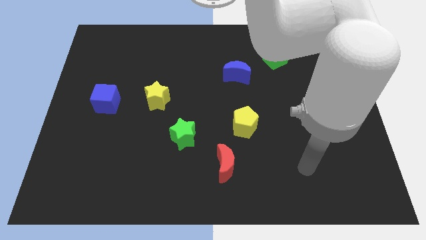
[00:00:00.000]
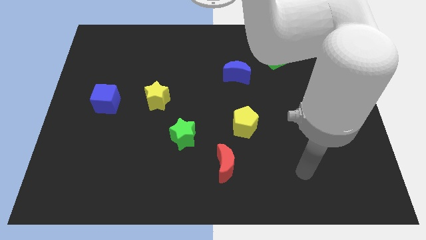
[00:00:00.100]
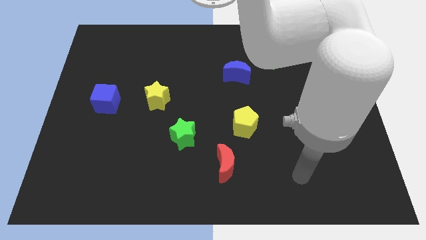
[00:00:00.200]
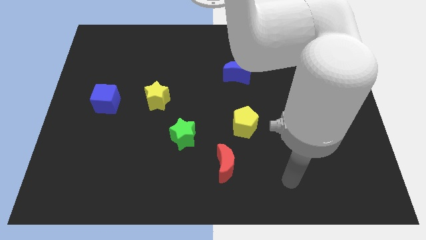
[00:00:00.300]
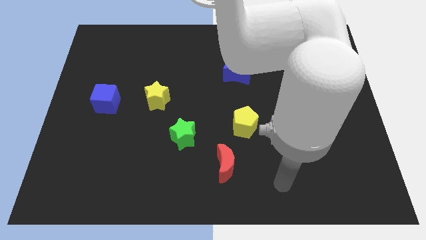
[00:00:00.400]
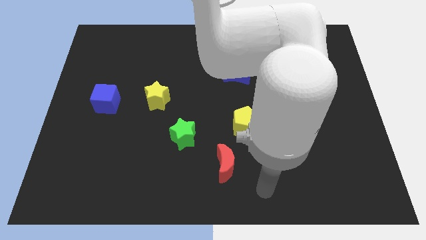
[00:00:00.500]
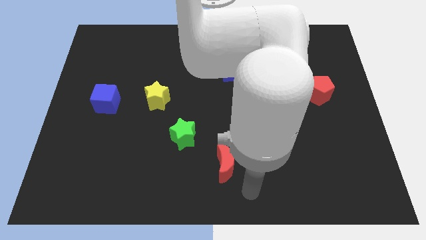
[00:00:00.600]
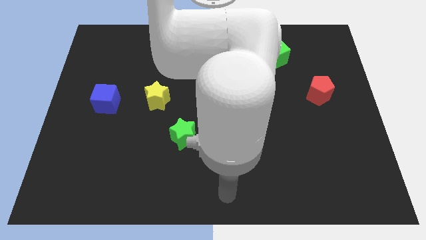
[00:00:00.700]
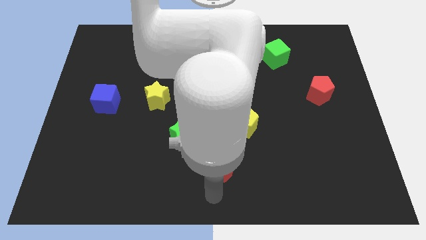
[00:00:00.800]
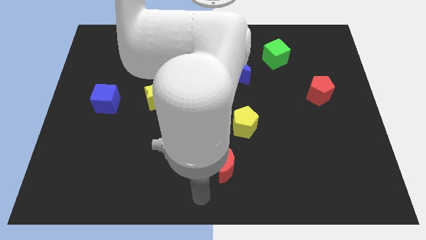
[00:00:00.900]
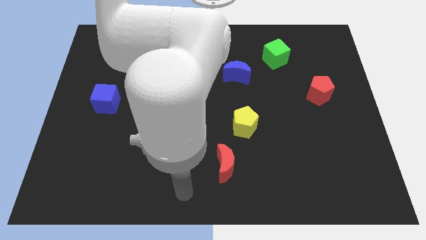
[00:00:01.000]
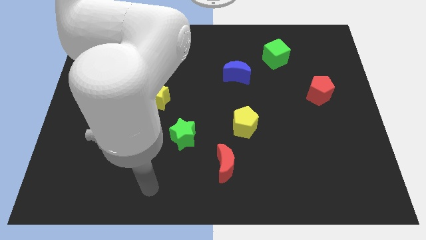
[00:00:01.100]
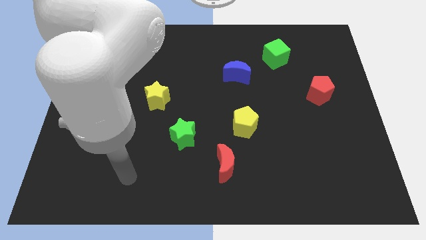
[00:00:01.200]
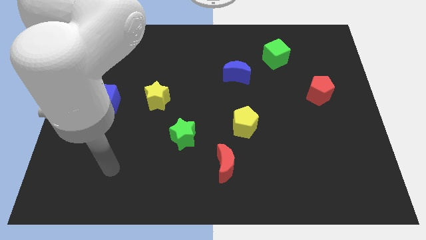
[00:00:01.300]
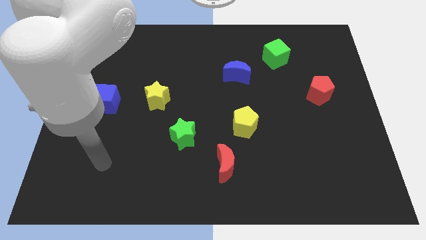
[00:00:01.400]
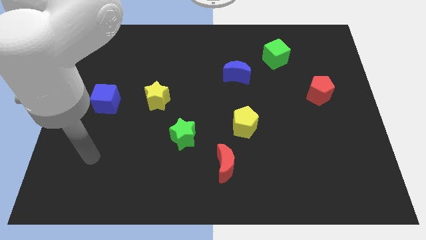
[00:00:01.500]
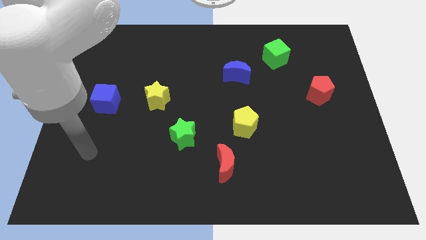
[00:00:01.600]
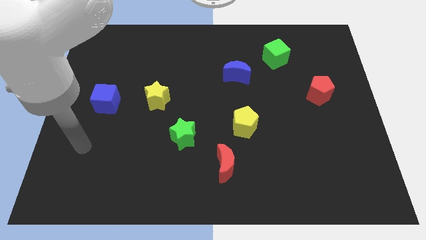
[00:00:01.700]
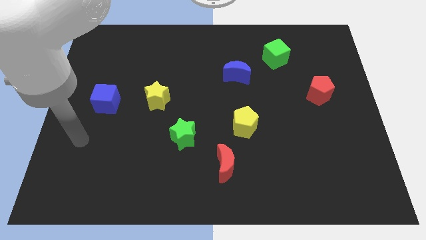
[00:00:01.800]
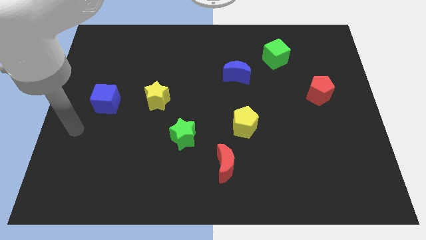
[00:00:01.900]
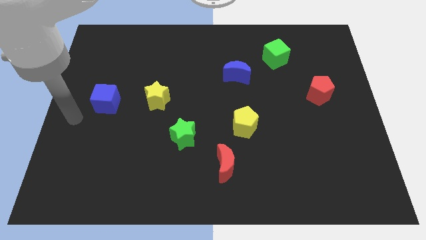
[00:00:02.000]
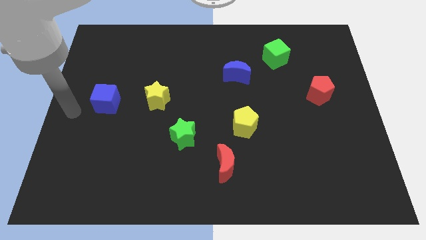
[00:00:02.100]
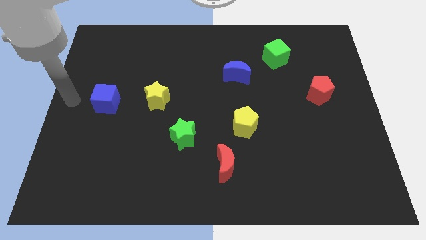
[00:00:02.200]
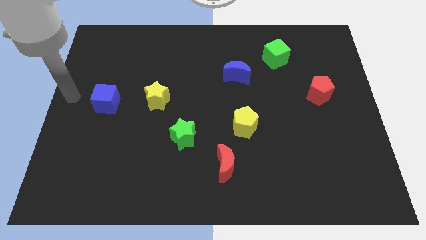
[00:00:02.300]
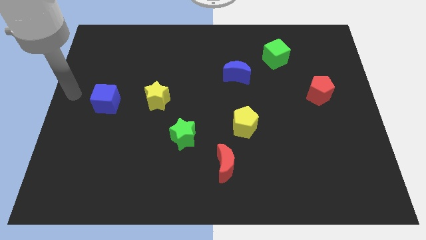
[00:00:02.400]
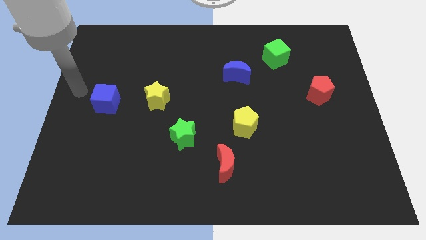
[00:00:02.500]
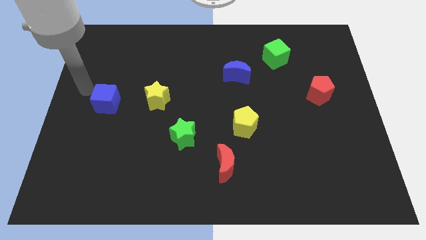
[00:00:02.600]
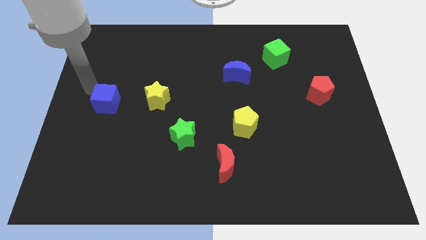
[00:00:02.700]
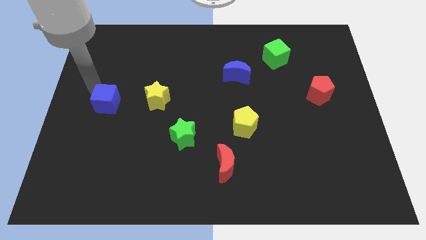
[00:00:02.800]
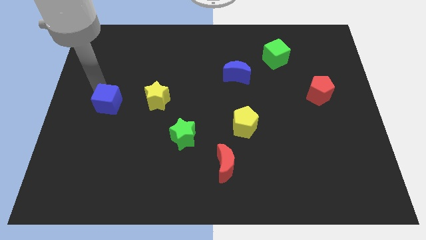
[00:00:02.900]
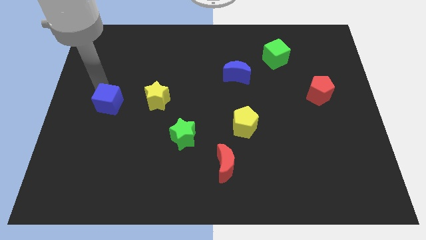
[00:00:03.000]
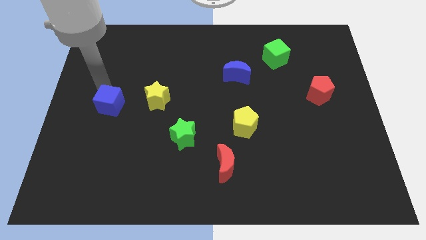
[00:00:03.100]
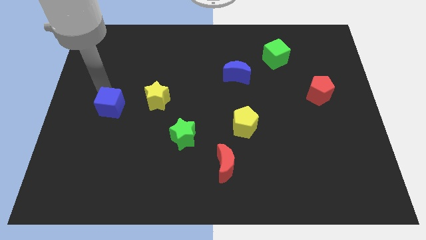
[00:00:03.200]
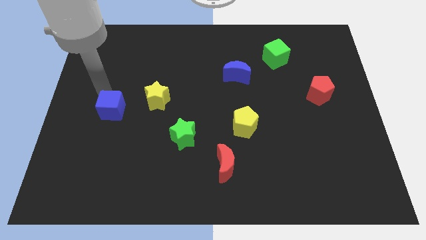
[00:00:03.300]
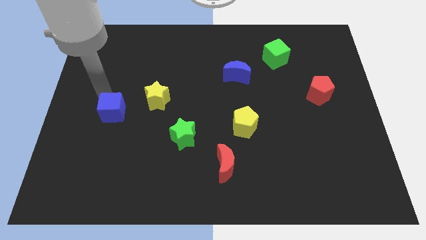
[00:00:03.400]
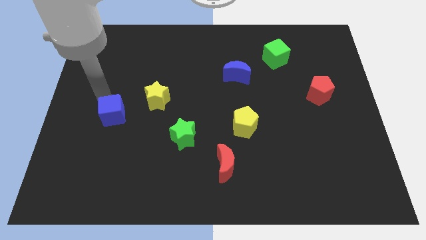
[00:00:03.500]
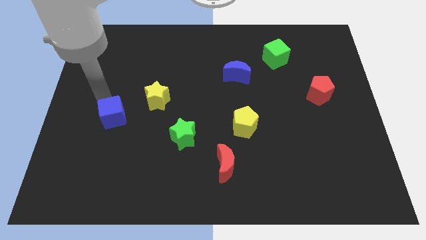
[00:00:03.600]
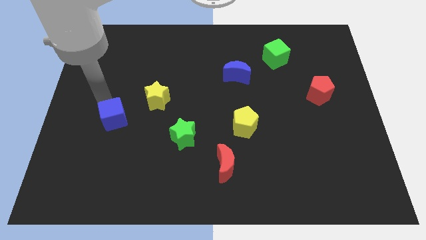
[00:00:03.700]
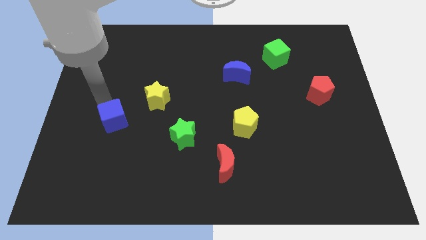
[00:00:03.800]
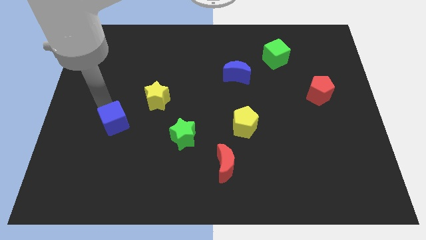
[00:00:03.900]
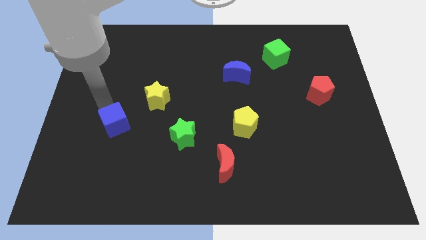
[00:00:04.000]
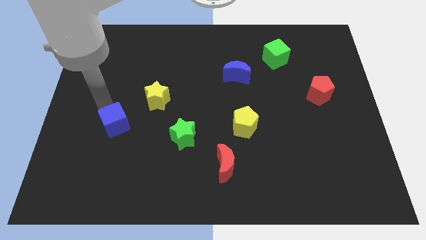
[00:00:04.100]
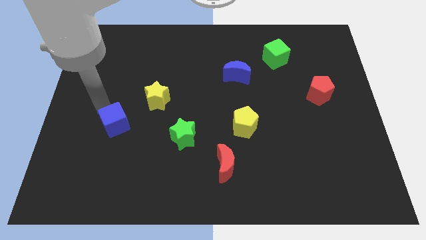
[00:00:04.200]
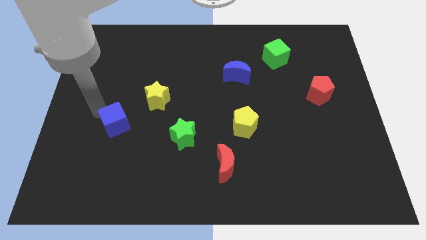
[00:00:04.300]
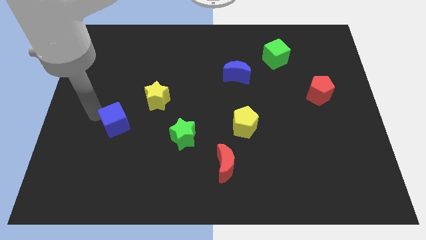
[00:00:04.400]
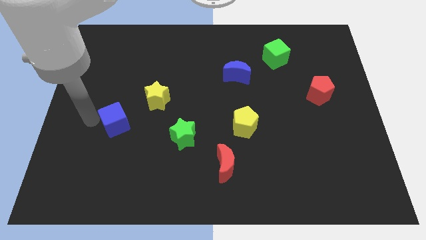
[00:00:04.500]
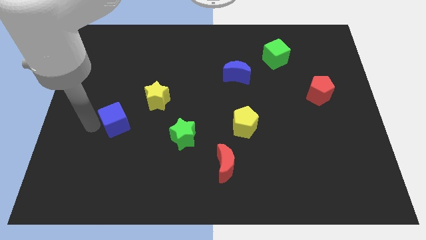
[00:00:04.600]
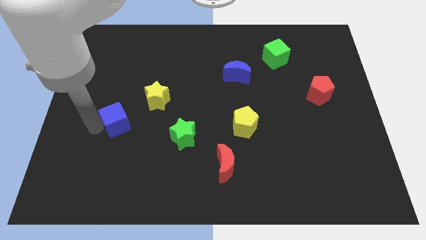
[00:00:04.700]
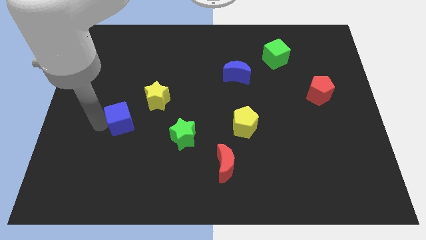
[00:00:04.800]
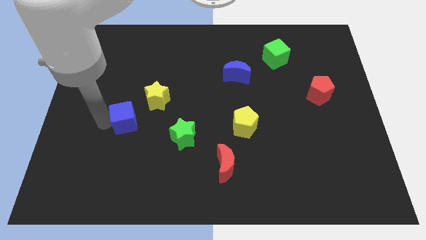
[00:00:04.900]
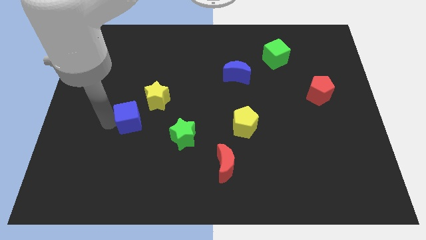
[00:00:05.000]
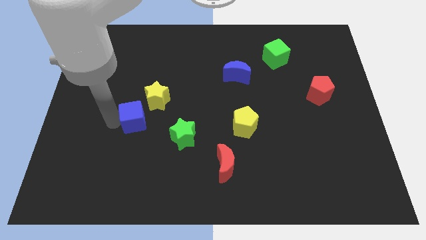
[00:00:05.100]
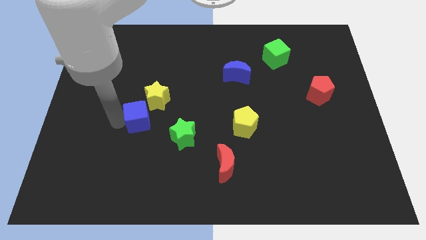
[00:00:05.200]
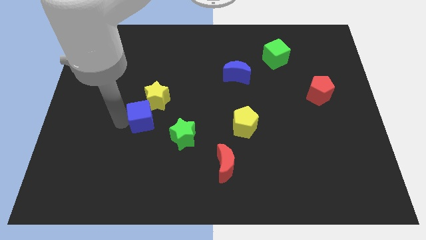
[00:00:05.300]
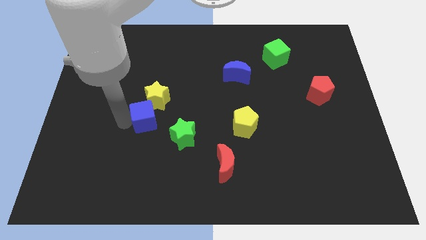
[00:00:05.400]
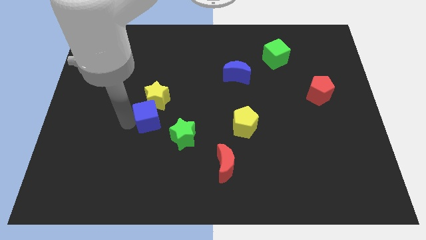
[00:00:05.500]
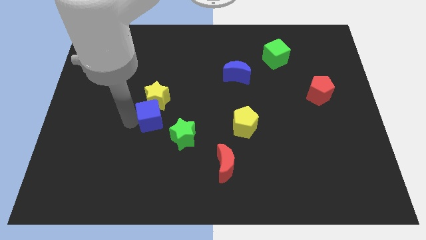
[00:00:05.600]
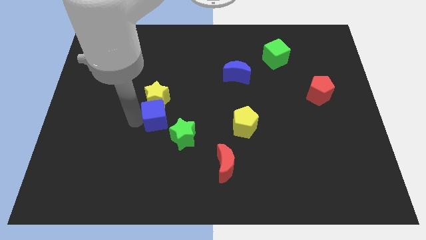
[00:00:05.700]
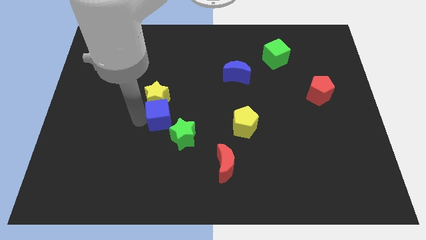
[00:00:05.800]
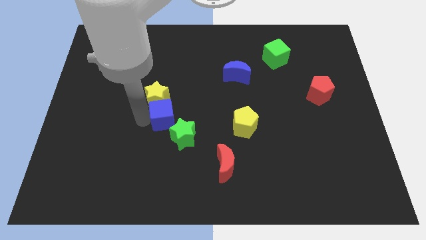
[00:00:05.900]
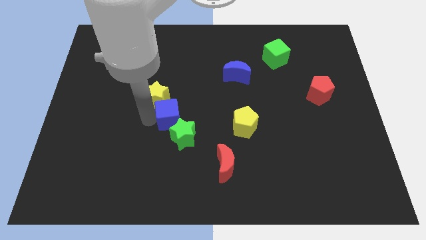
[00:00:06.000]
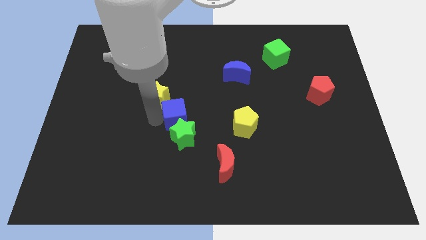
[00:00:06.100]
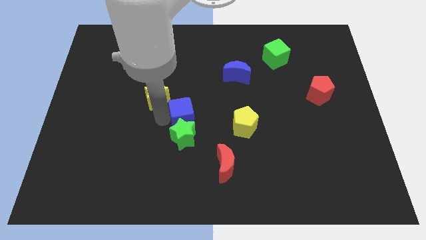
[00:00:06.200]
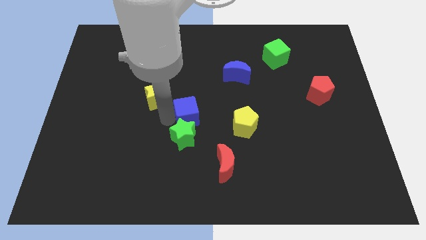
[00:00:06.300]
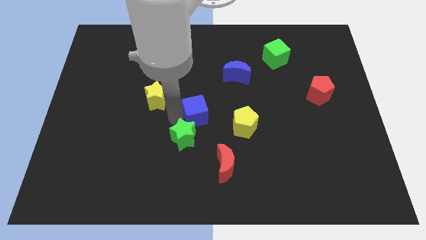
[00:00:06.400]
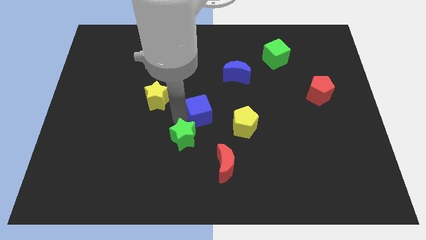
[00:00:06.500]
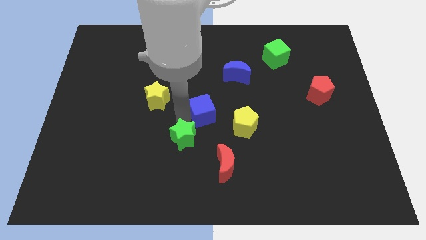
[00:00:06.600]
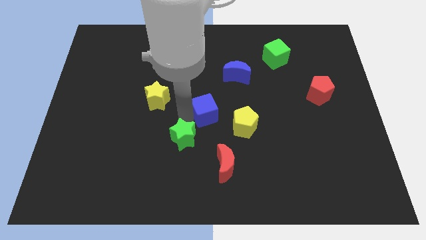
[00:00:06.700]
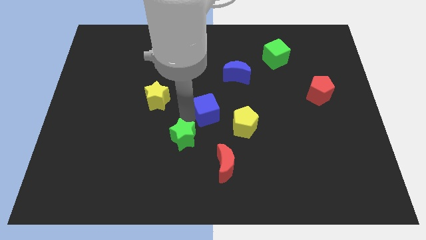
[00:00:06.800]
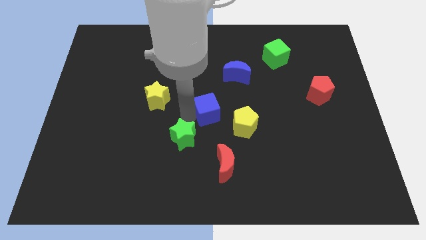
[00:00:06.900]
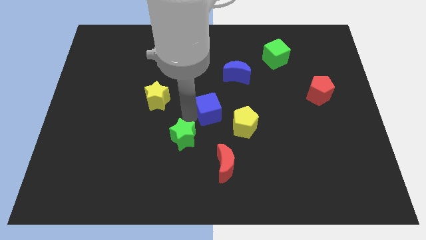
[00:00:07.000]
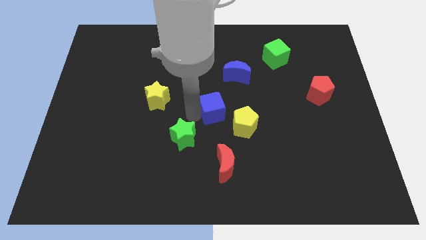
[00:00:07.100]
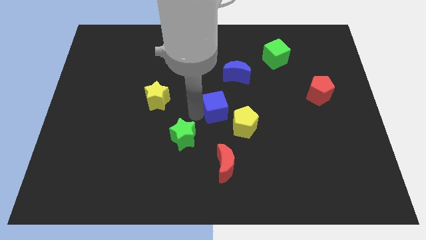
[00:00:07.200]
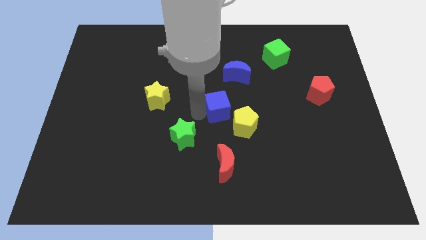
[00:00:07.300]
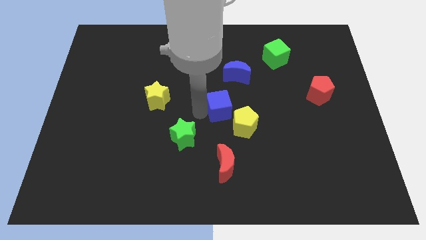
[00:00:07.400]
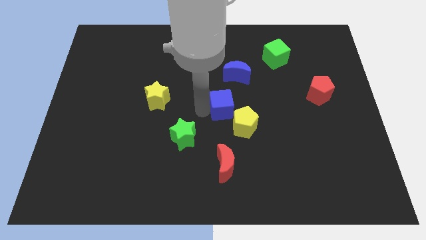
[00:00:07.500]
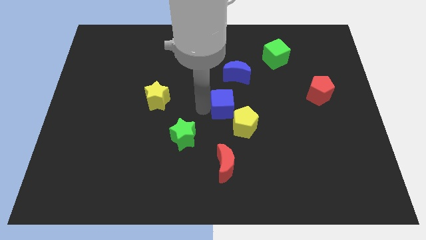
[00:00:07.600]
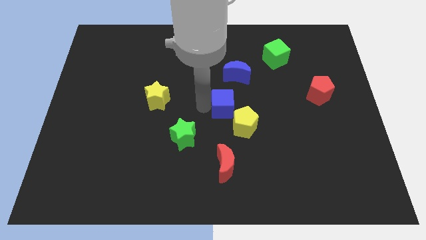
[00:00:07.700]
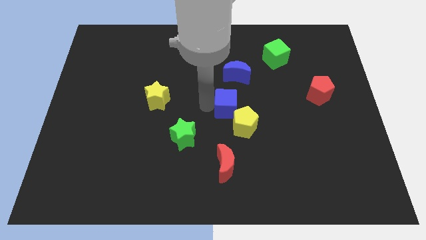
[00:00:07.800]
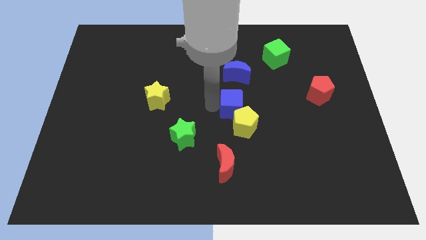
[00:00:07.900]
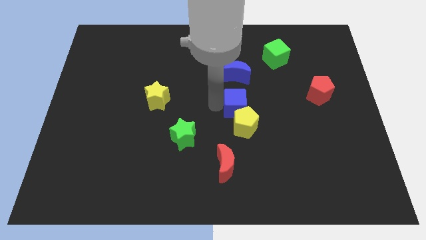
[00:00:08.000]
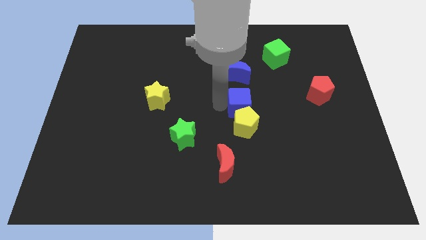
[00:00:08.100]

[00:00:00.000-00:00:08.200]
push the blue cube next to the yellow pentagon

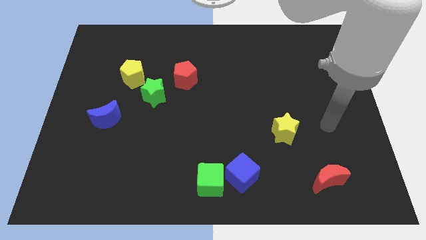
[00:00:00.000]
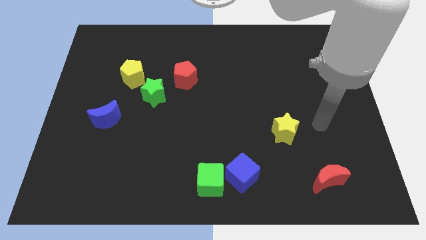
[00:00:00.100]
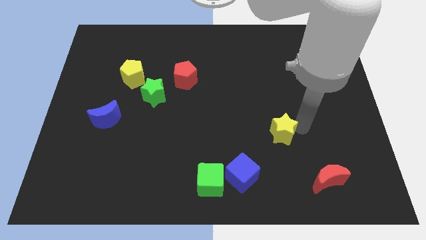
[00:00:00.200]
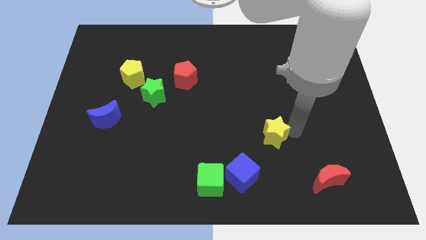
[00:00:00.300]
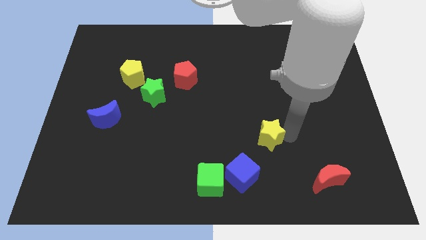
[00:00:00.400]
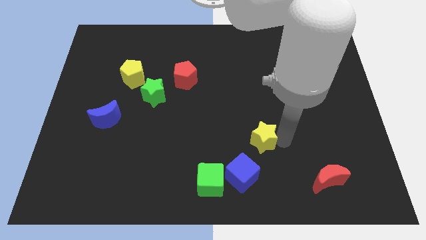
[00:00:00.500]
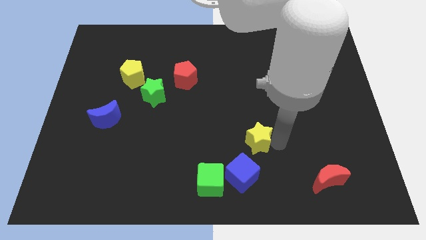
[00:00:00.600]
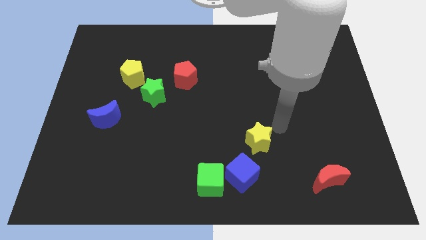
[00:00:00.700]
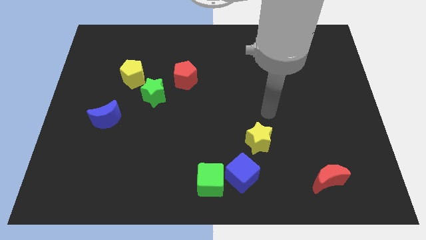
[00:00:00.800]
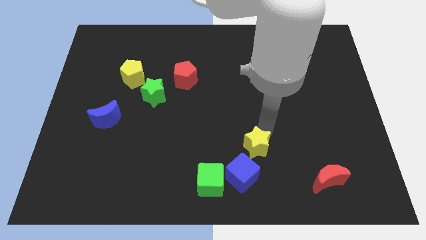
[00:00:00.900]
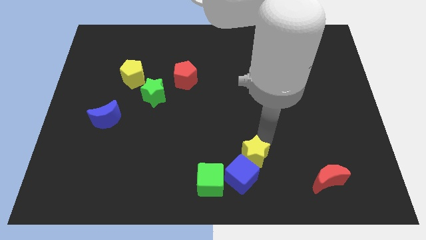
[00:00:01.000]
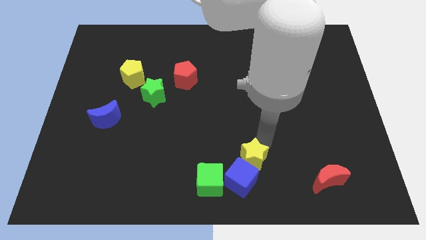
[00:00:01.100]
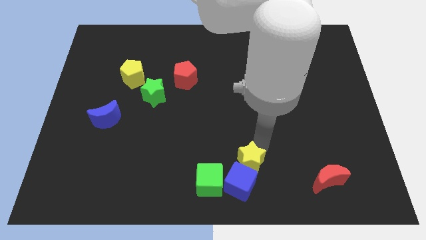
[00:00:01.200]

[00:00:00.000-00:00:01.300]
move the yellow star to the blue cube
